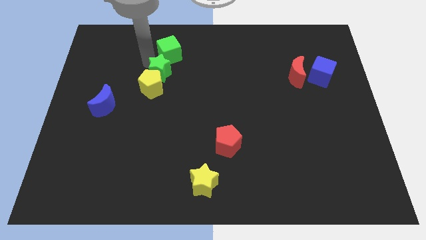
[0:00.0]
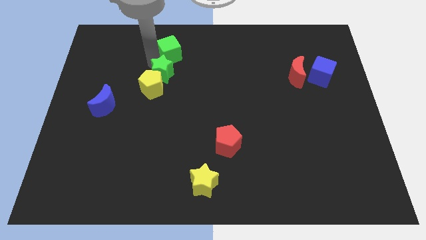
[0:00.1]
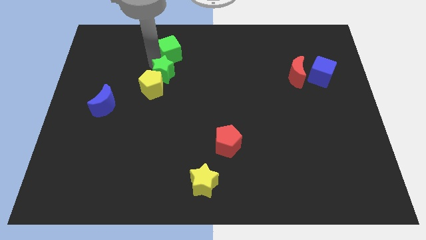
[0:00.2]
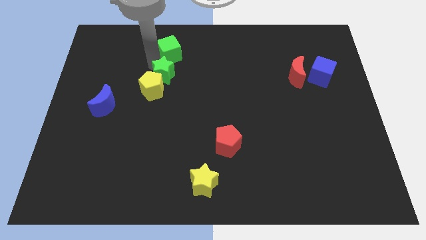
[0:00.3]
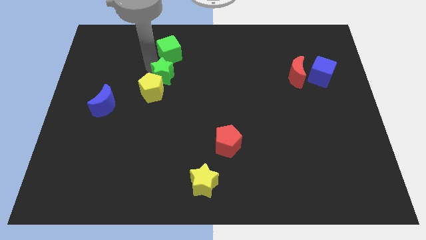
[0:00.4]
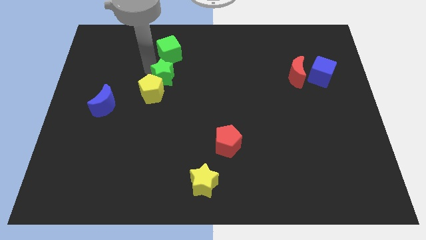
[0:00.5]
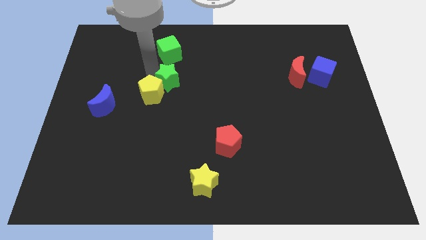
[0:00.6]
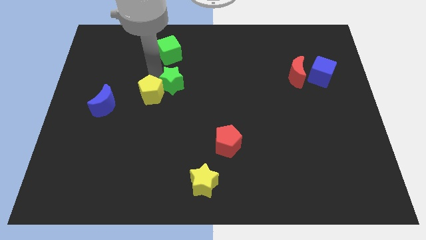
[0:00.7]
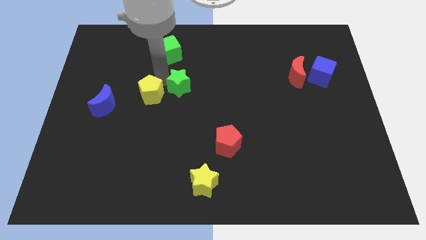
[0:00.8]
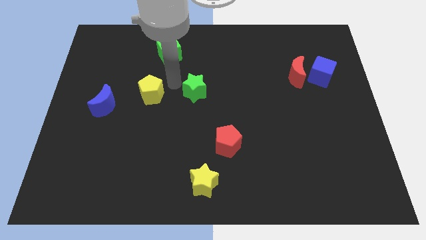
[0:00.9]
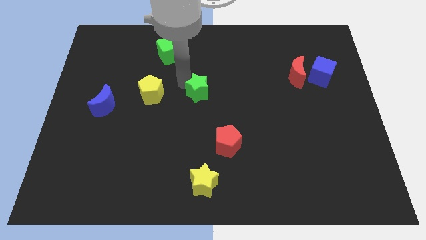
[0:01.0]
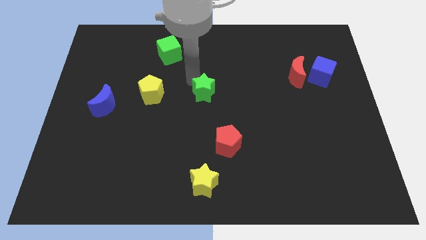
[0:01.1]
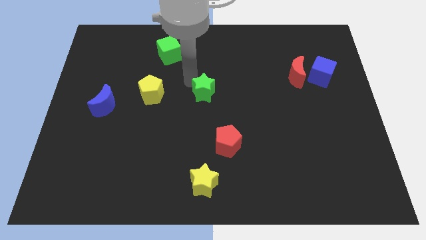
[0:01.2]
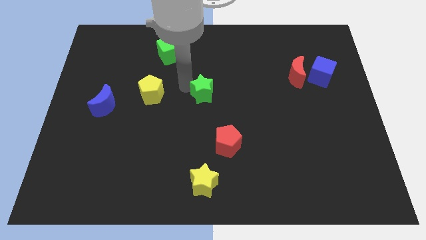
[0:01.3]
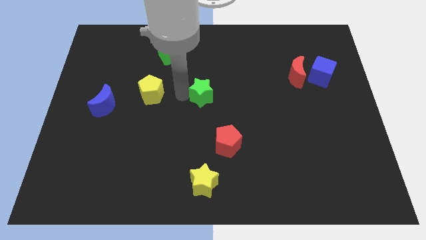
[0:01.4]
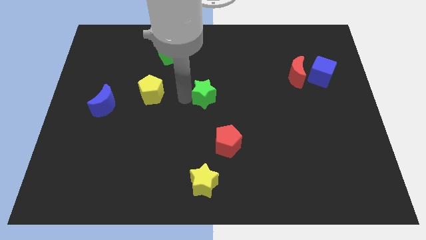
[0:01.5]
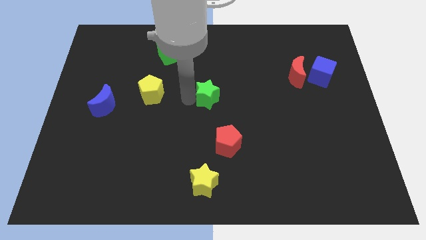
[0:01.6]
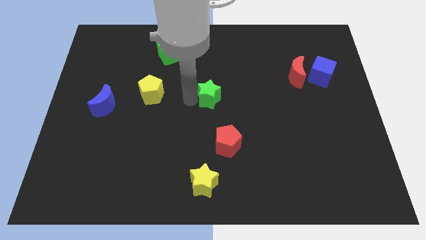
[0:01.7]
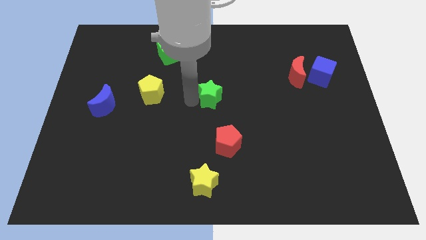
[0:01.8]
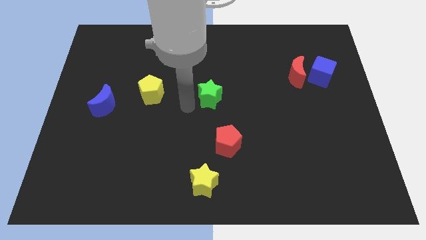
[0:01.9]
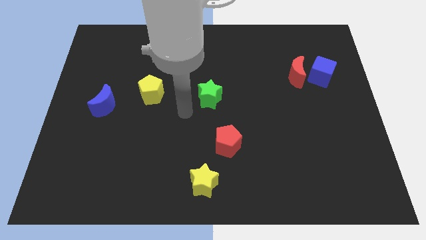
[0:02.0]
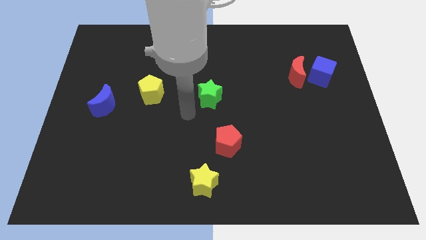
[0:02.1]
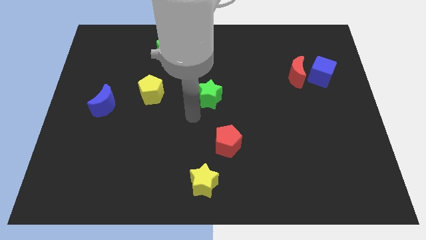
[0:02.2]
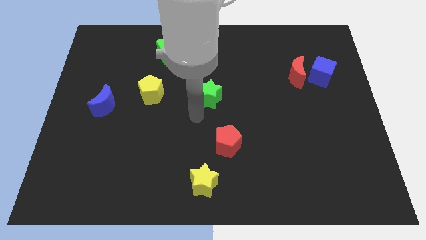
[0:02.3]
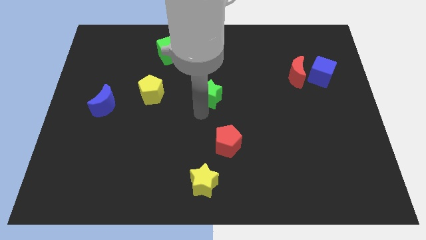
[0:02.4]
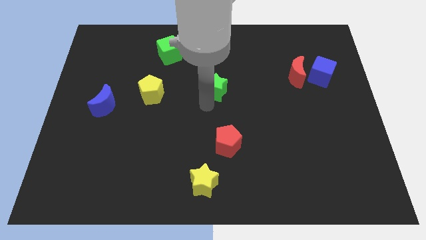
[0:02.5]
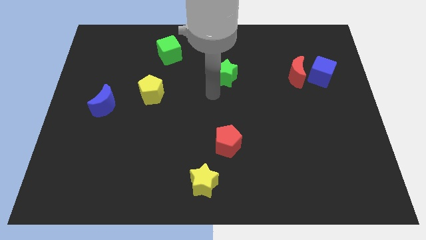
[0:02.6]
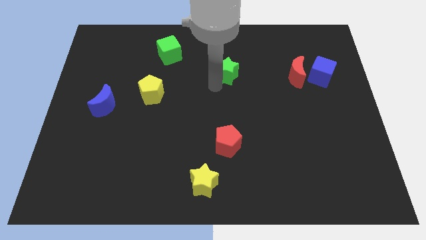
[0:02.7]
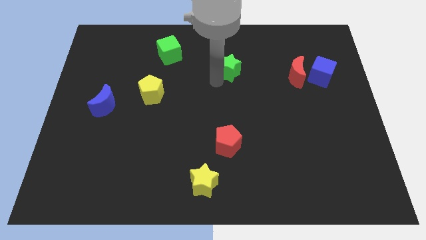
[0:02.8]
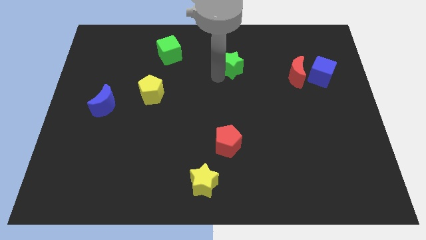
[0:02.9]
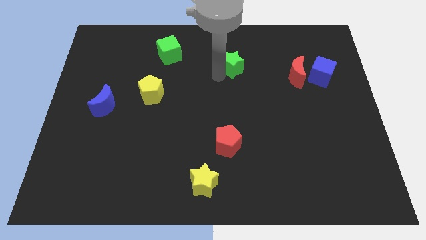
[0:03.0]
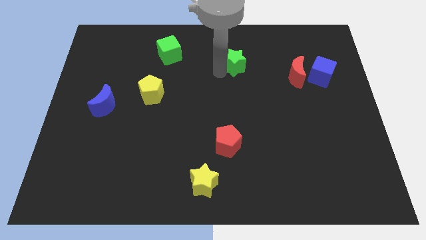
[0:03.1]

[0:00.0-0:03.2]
slide the green star vertically to the top side of the red pentagon

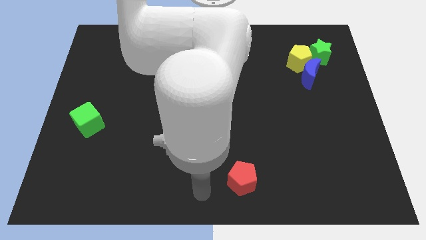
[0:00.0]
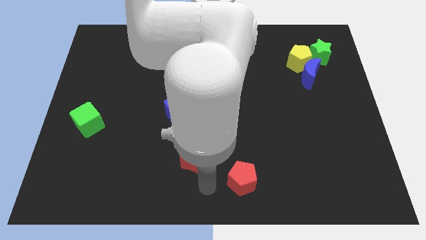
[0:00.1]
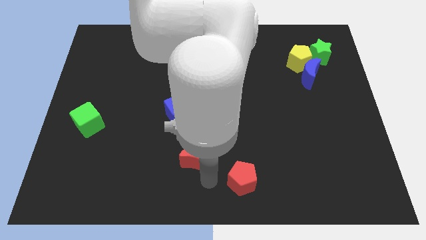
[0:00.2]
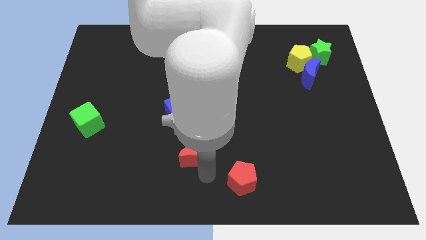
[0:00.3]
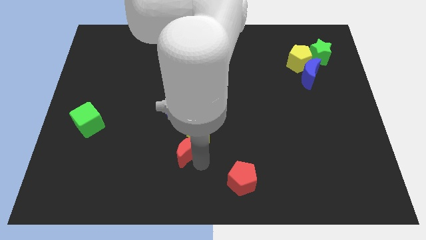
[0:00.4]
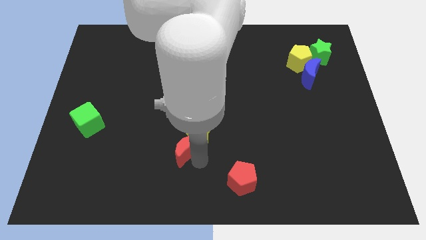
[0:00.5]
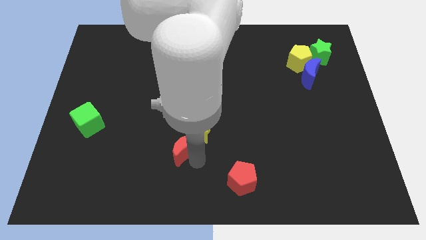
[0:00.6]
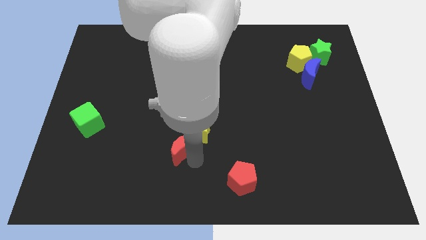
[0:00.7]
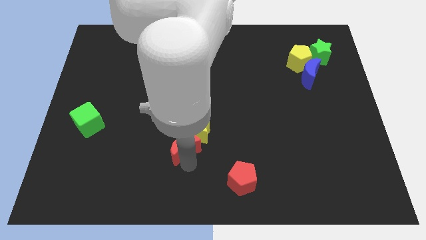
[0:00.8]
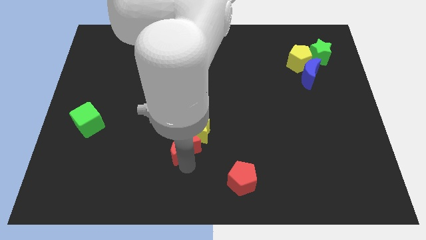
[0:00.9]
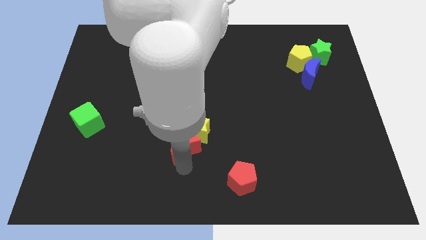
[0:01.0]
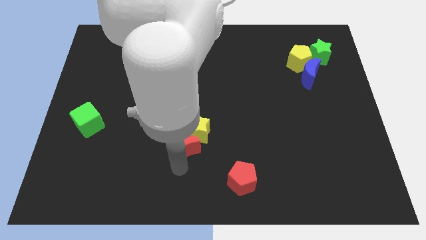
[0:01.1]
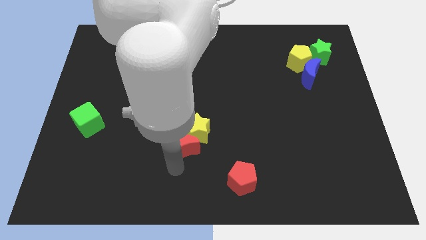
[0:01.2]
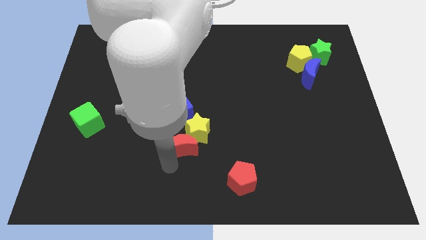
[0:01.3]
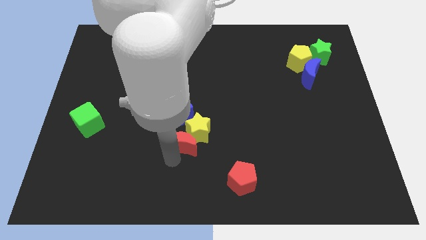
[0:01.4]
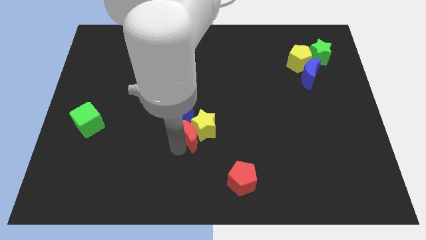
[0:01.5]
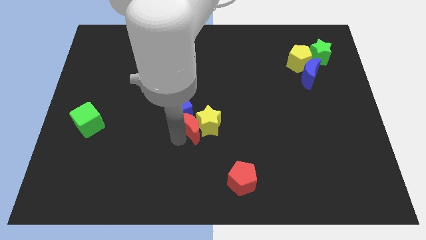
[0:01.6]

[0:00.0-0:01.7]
push red crescent into yellow star

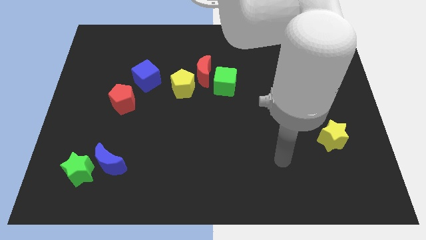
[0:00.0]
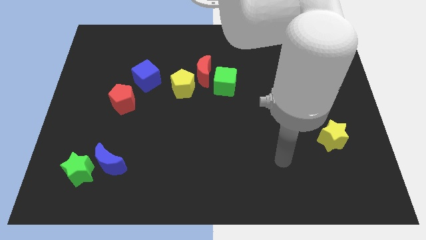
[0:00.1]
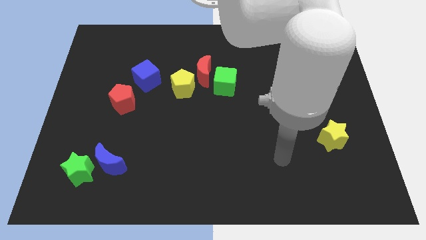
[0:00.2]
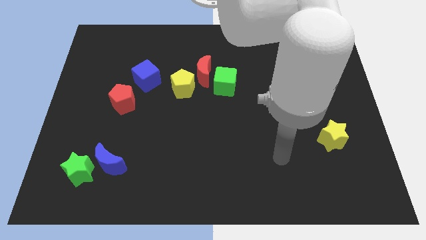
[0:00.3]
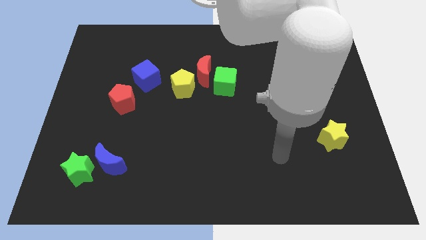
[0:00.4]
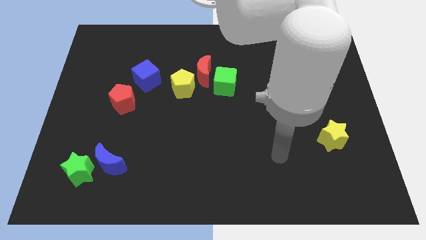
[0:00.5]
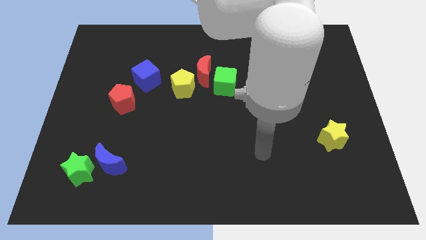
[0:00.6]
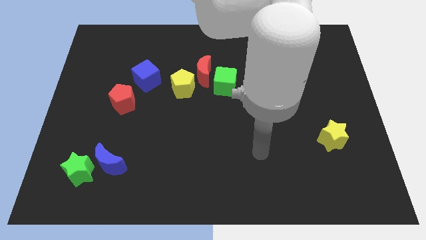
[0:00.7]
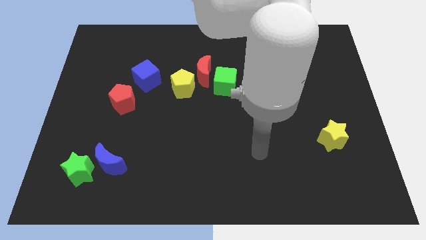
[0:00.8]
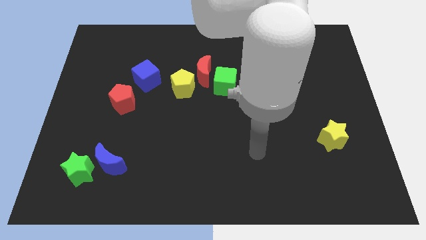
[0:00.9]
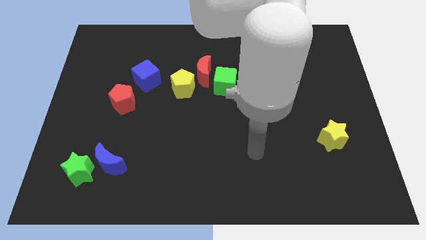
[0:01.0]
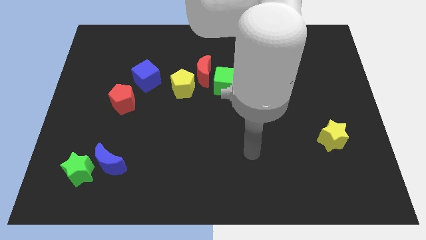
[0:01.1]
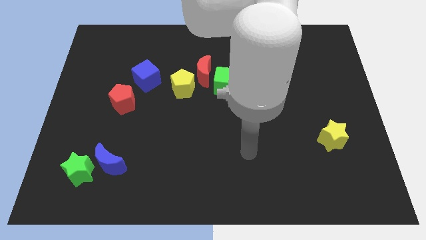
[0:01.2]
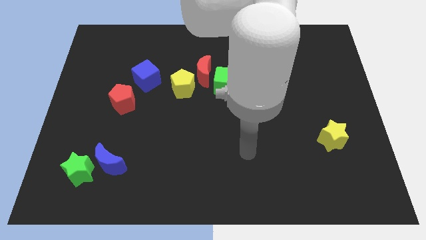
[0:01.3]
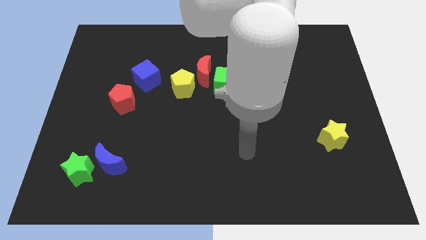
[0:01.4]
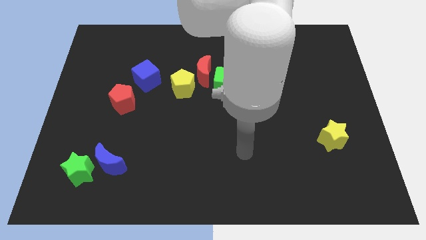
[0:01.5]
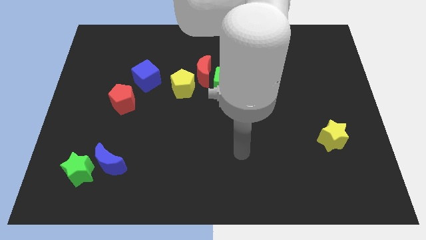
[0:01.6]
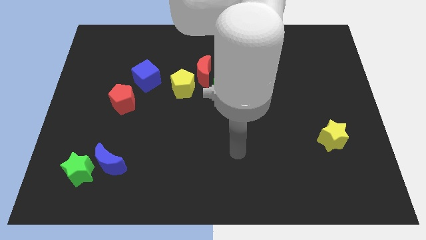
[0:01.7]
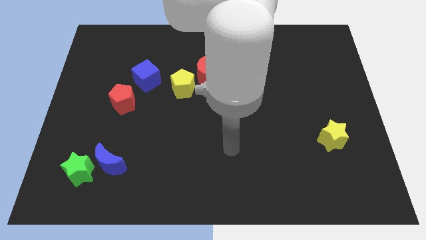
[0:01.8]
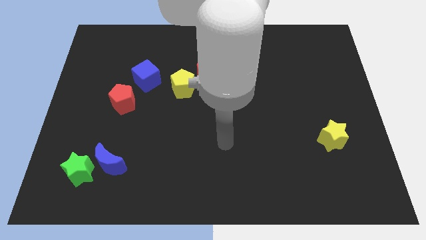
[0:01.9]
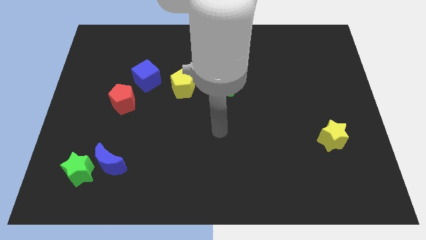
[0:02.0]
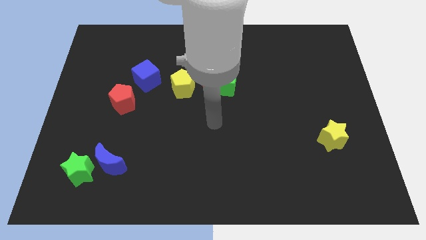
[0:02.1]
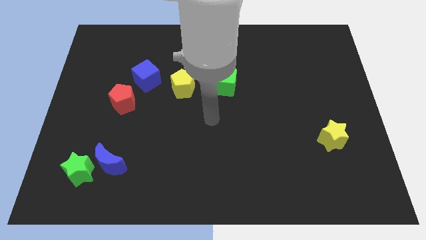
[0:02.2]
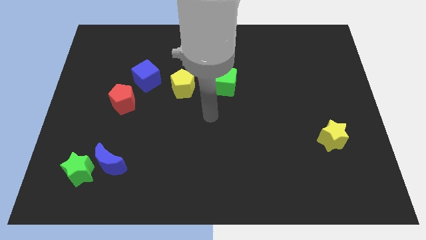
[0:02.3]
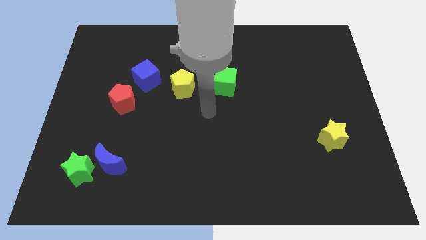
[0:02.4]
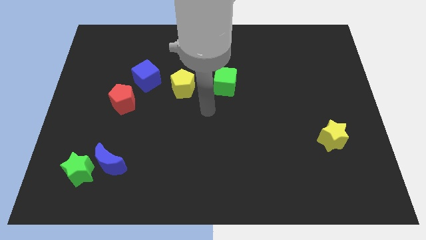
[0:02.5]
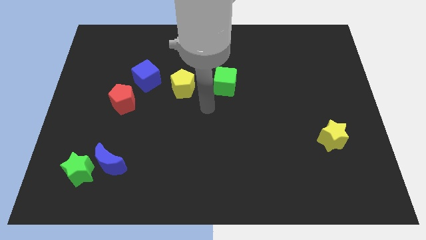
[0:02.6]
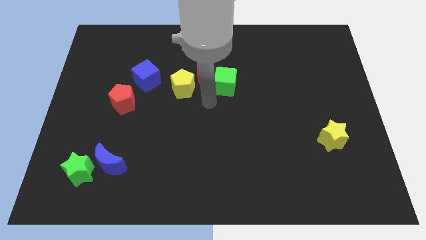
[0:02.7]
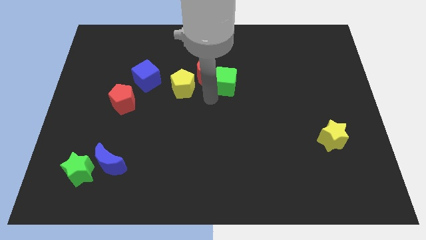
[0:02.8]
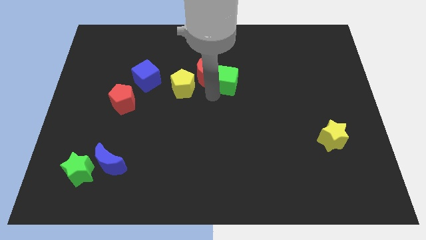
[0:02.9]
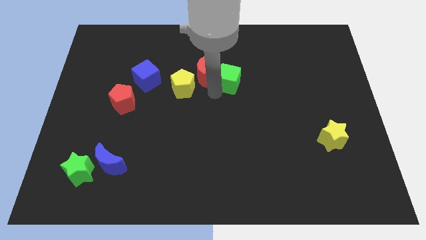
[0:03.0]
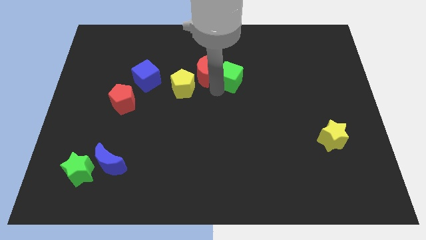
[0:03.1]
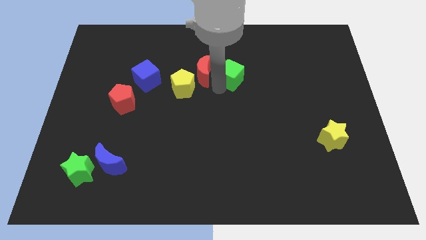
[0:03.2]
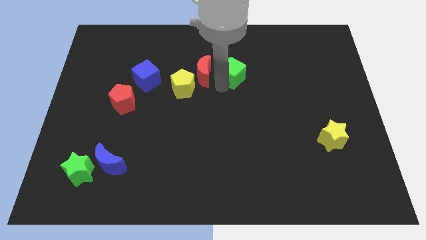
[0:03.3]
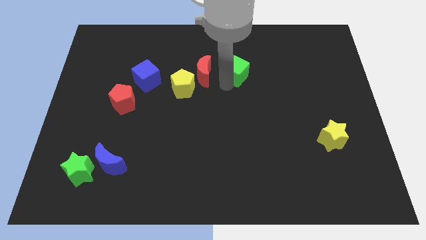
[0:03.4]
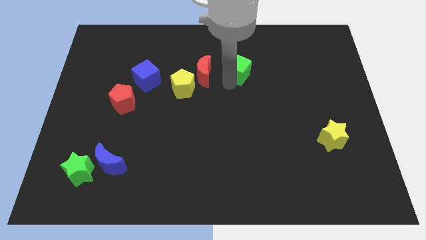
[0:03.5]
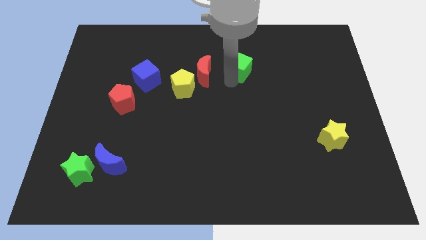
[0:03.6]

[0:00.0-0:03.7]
slightly push the green cube to the top center

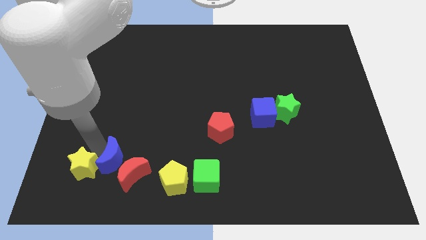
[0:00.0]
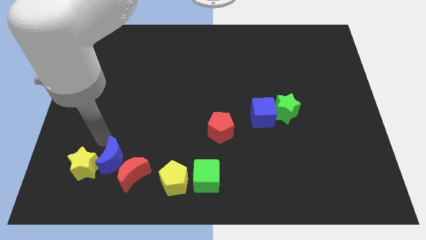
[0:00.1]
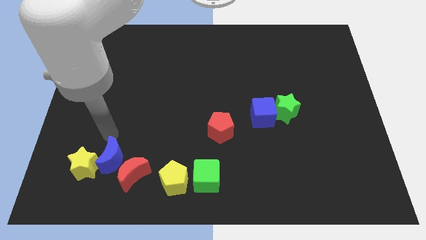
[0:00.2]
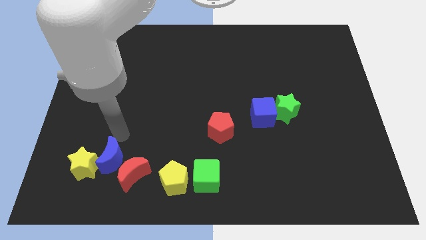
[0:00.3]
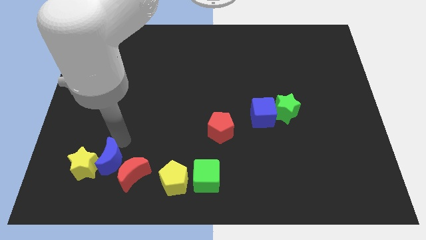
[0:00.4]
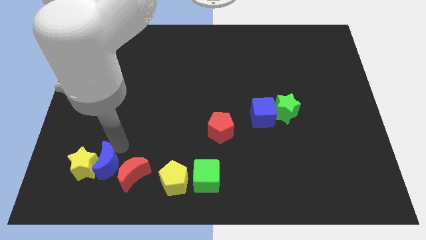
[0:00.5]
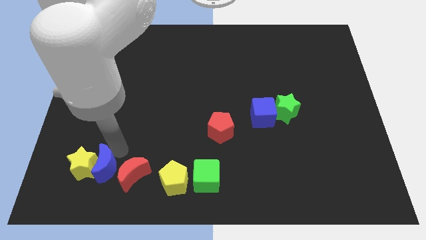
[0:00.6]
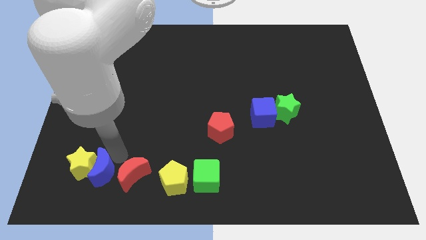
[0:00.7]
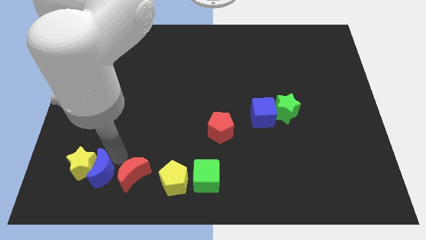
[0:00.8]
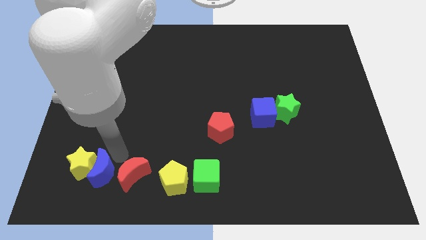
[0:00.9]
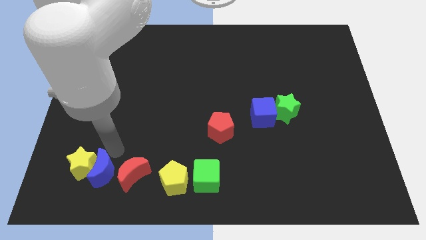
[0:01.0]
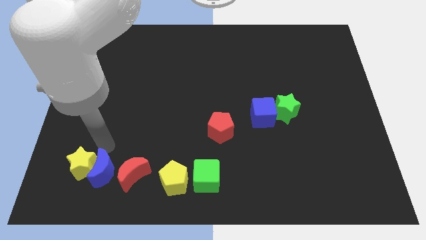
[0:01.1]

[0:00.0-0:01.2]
push the blue crescent close to the yellow star
